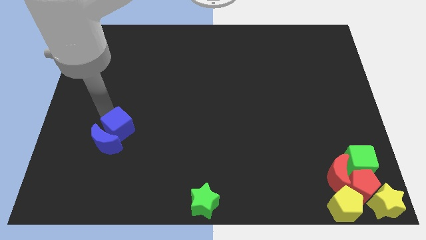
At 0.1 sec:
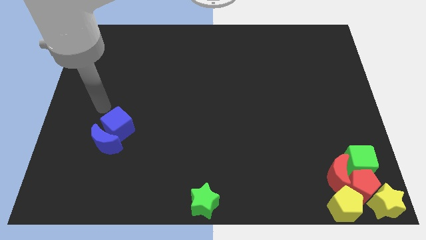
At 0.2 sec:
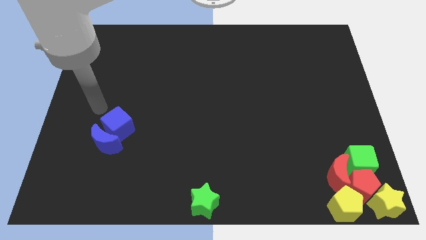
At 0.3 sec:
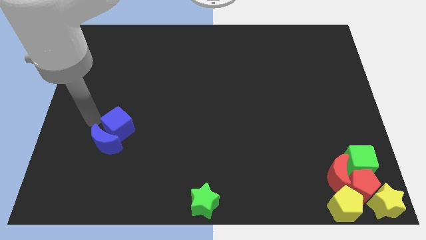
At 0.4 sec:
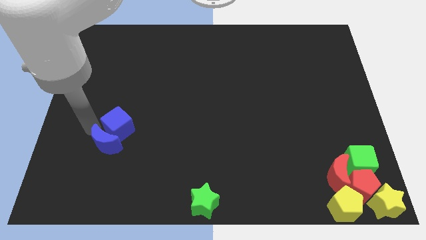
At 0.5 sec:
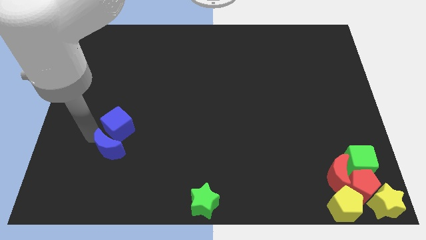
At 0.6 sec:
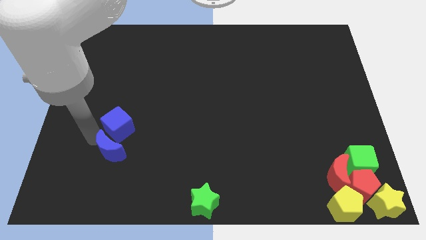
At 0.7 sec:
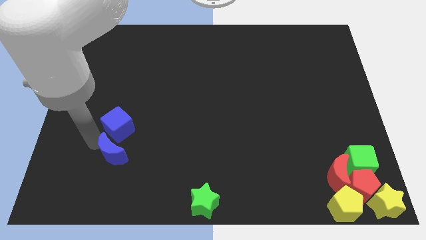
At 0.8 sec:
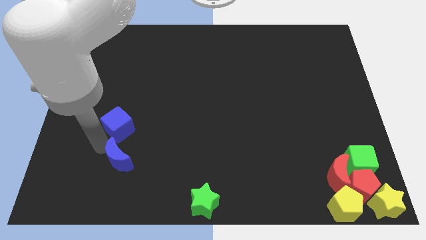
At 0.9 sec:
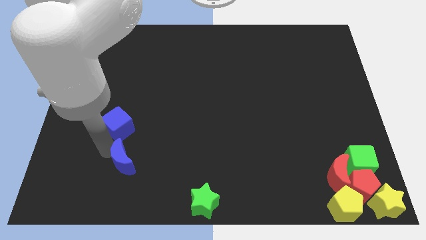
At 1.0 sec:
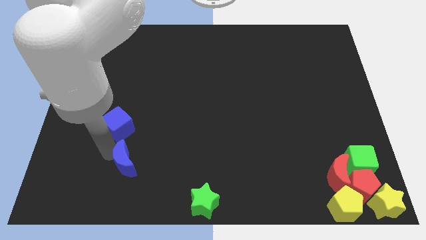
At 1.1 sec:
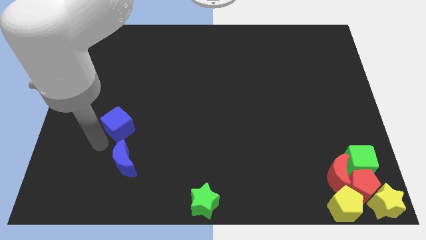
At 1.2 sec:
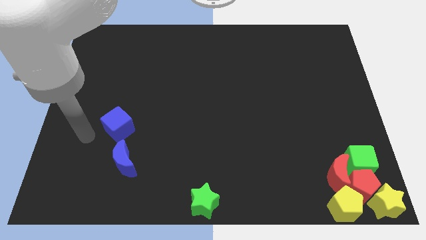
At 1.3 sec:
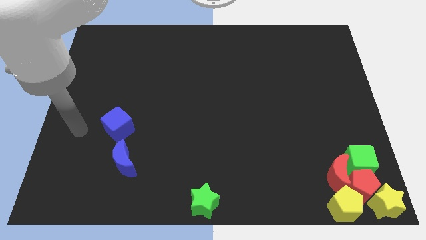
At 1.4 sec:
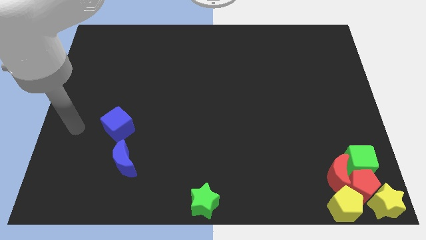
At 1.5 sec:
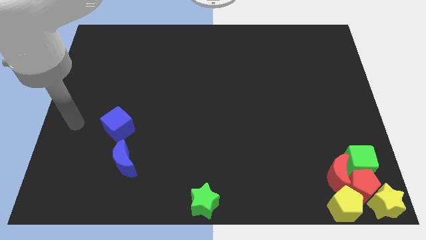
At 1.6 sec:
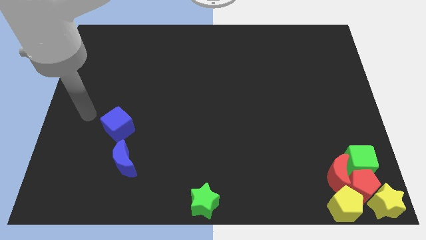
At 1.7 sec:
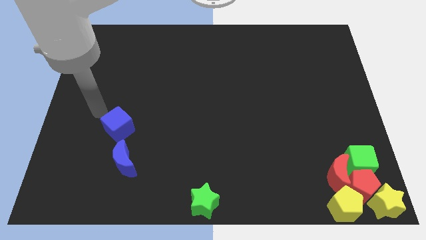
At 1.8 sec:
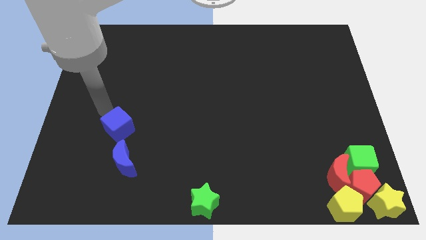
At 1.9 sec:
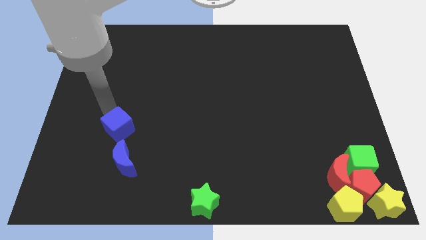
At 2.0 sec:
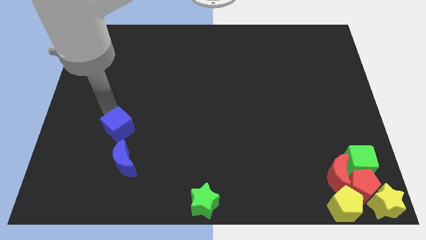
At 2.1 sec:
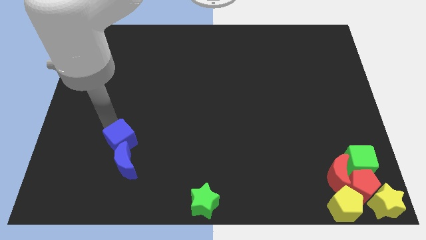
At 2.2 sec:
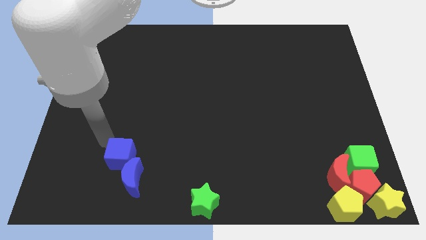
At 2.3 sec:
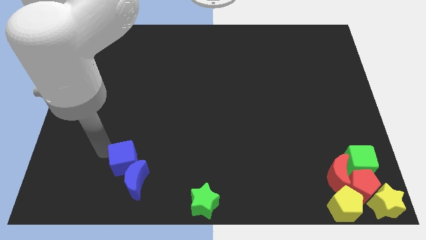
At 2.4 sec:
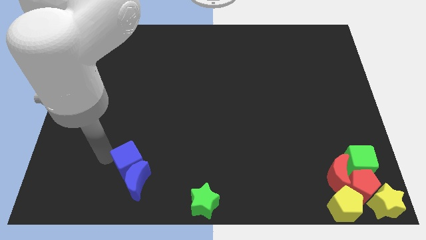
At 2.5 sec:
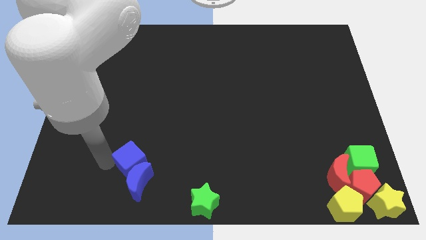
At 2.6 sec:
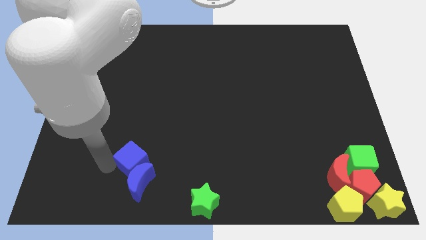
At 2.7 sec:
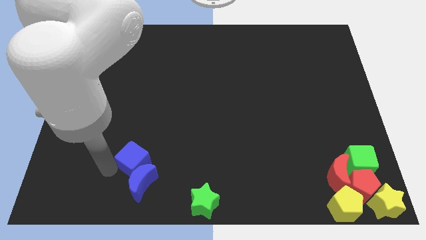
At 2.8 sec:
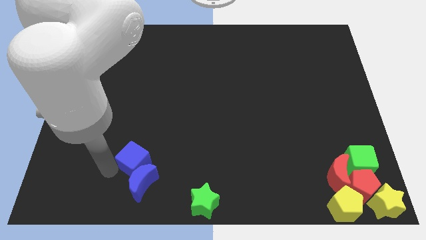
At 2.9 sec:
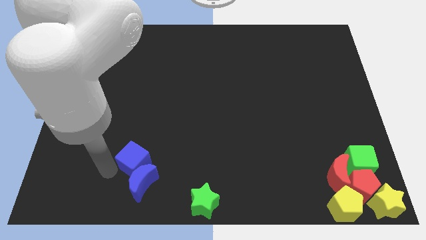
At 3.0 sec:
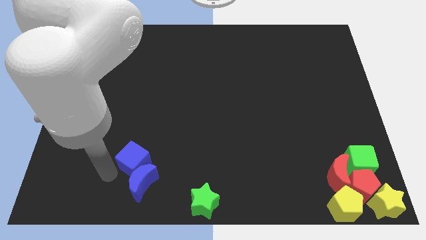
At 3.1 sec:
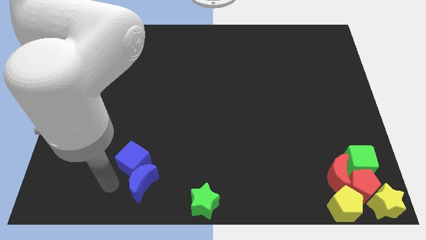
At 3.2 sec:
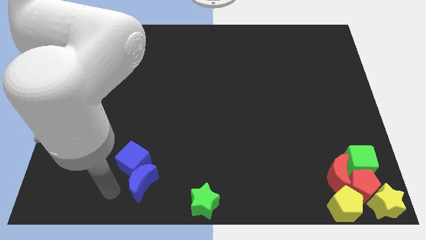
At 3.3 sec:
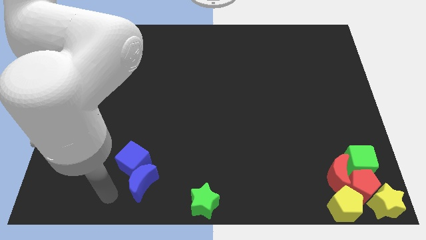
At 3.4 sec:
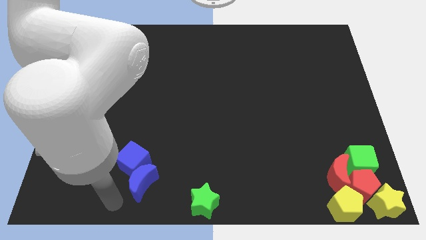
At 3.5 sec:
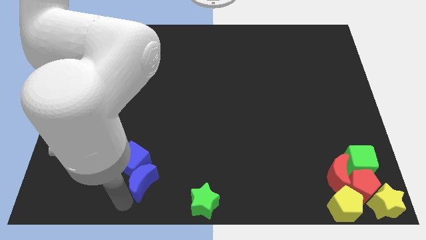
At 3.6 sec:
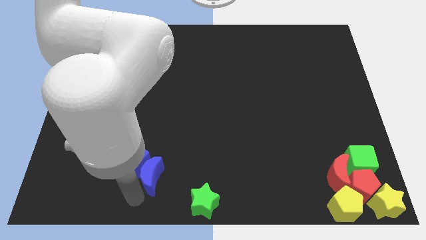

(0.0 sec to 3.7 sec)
slide both the blue blocks towards the green star

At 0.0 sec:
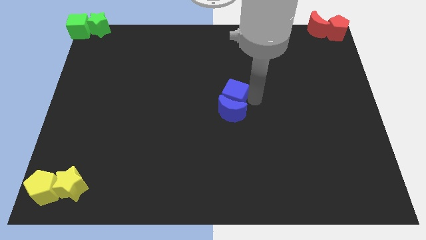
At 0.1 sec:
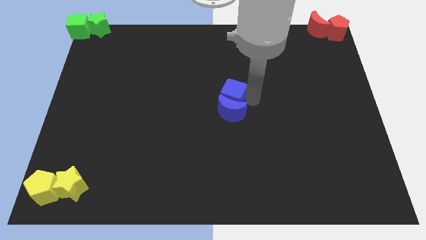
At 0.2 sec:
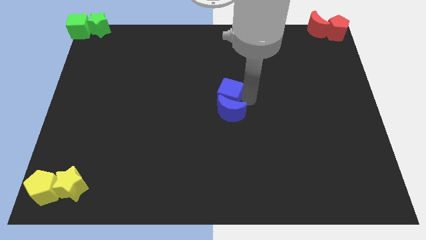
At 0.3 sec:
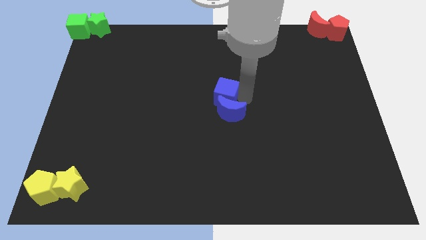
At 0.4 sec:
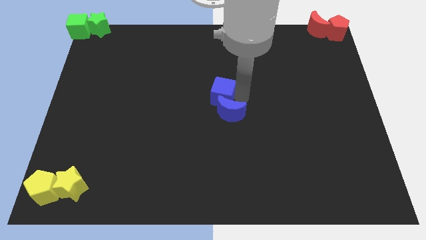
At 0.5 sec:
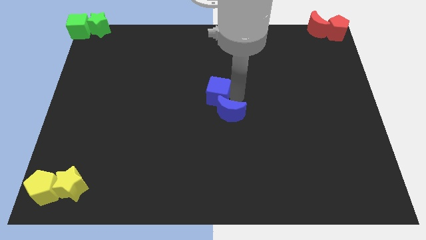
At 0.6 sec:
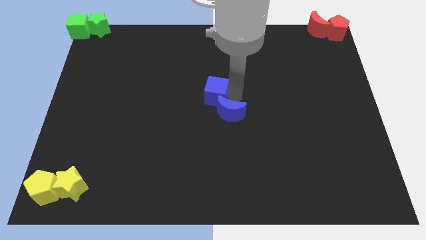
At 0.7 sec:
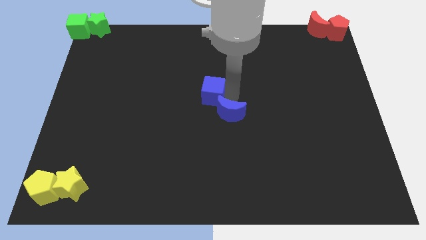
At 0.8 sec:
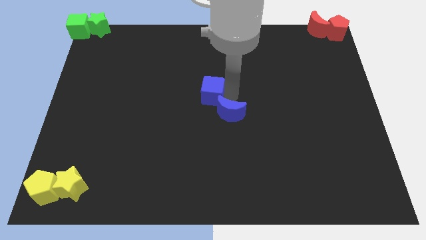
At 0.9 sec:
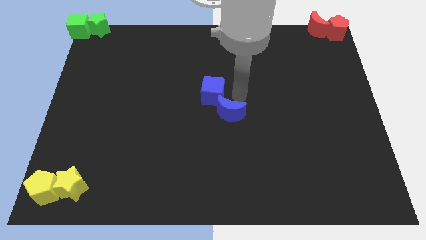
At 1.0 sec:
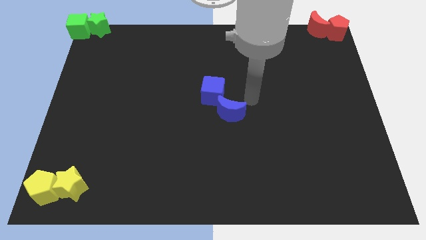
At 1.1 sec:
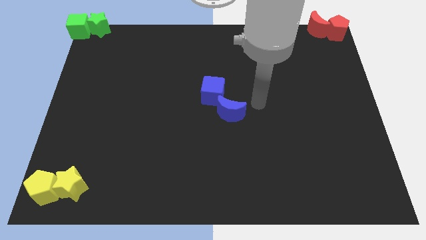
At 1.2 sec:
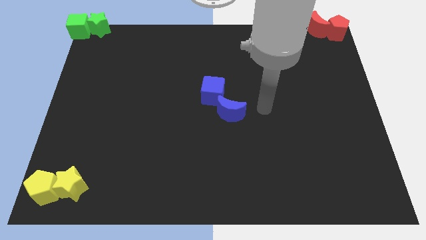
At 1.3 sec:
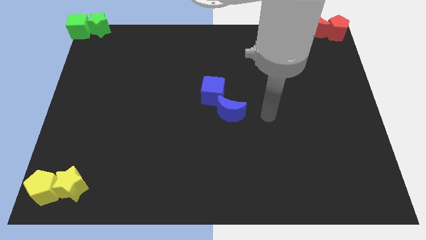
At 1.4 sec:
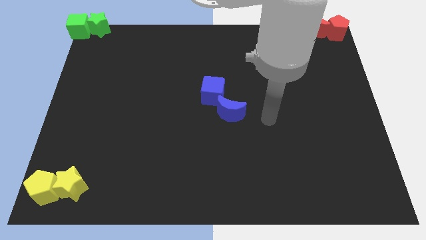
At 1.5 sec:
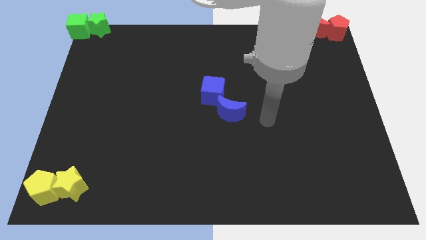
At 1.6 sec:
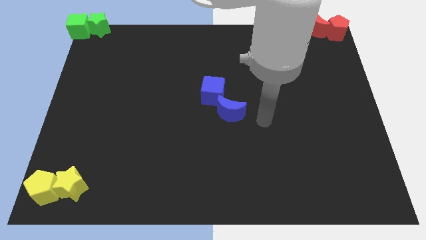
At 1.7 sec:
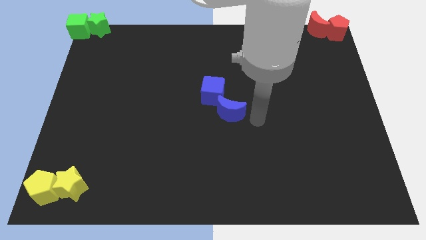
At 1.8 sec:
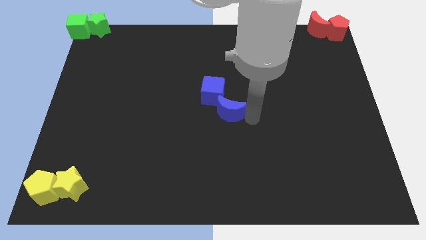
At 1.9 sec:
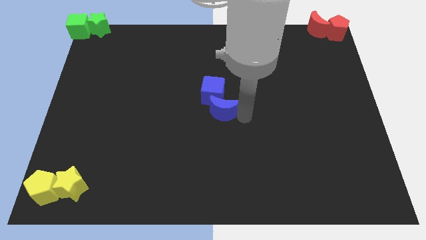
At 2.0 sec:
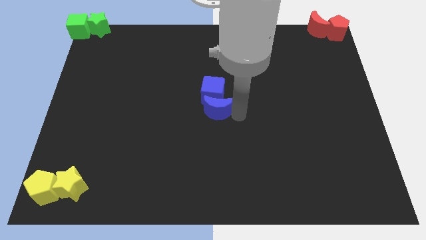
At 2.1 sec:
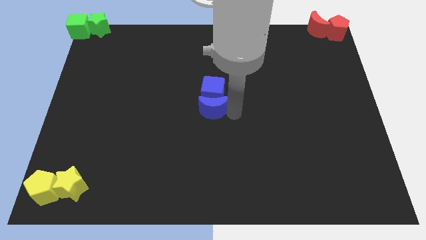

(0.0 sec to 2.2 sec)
push the group of blue blocks to the center of the board

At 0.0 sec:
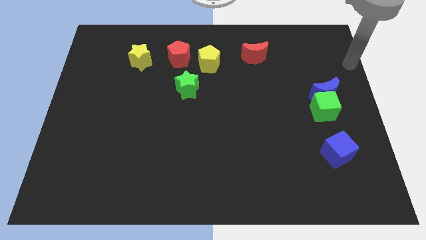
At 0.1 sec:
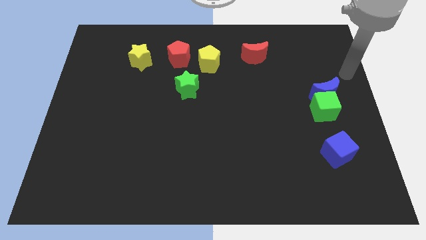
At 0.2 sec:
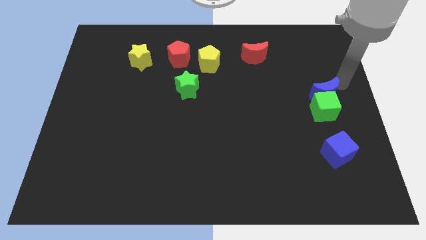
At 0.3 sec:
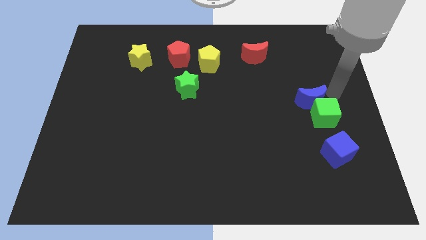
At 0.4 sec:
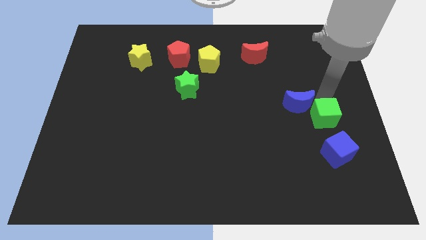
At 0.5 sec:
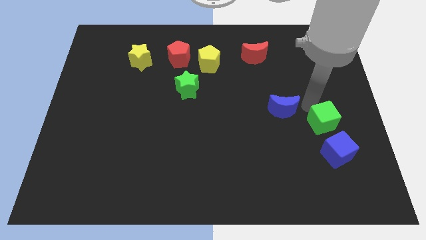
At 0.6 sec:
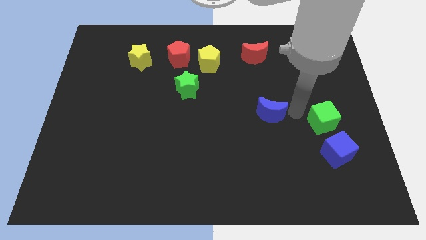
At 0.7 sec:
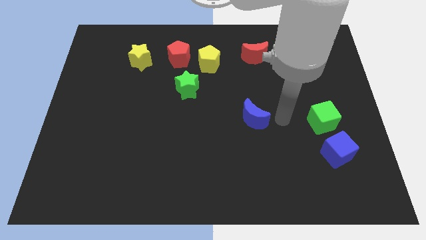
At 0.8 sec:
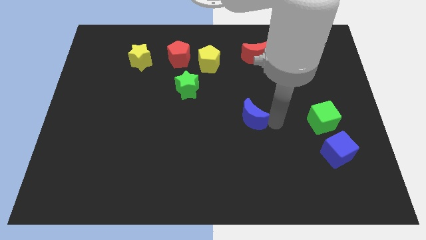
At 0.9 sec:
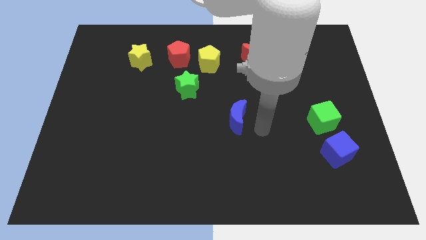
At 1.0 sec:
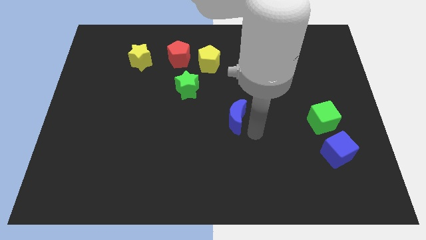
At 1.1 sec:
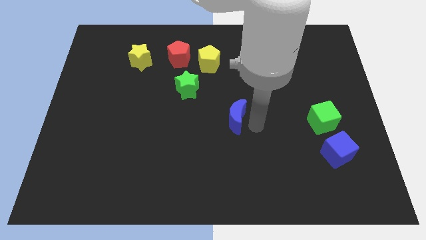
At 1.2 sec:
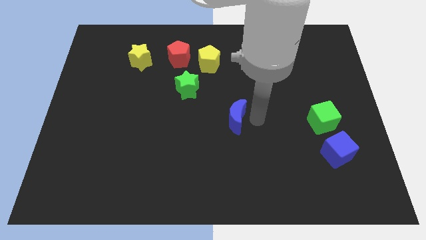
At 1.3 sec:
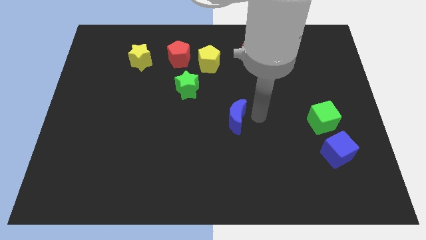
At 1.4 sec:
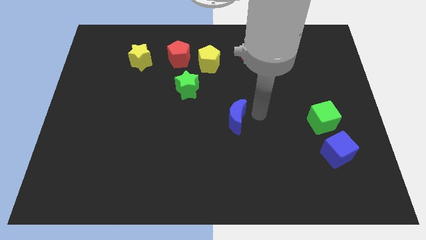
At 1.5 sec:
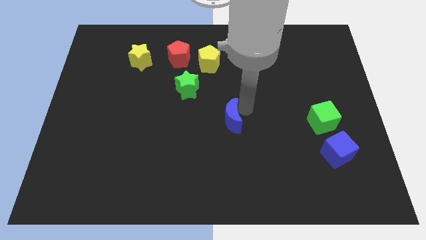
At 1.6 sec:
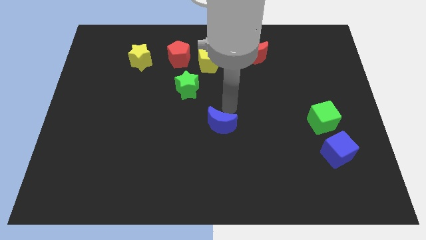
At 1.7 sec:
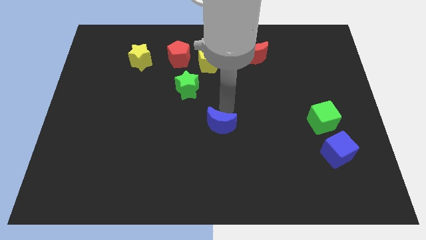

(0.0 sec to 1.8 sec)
separate the blue crescent from the green cube

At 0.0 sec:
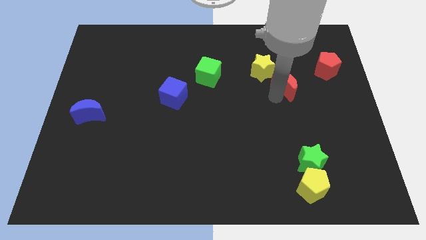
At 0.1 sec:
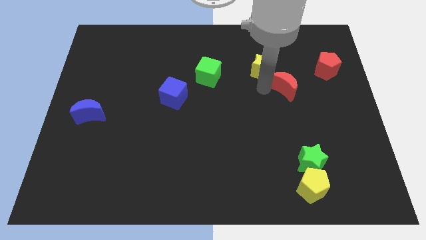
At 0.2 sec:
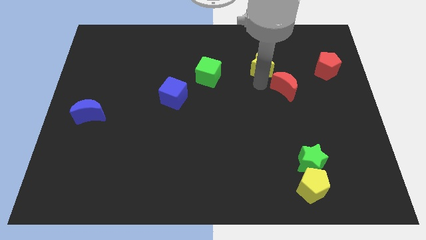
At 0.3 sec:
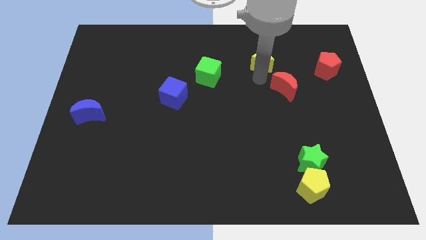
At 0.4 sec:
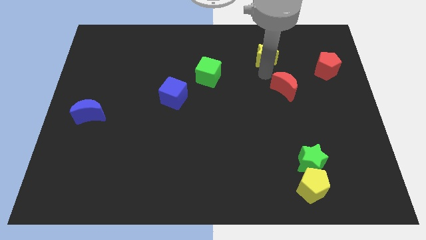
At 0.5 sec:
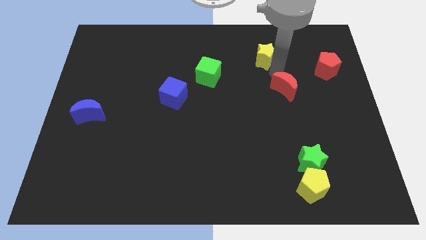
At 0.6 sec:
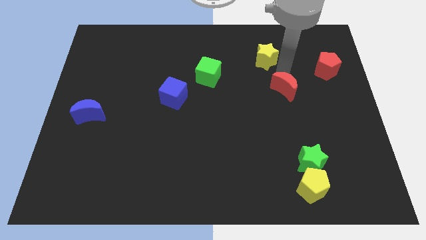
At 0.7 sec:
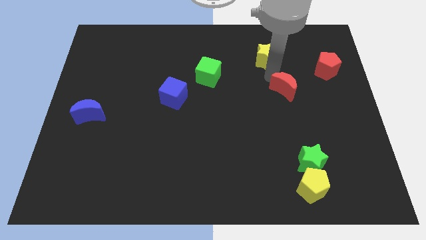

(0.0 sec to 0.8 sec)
push yellow star towards the top of the board

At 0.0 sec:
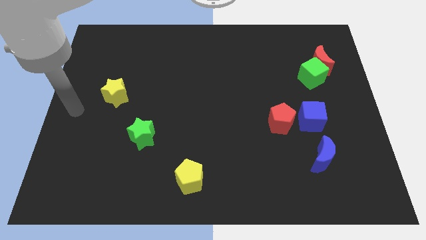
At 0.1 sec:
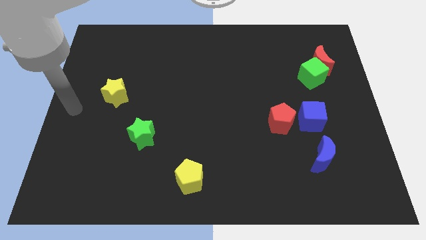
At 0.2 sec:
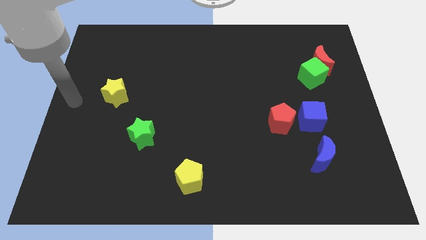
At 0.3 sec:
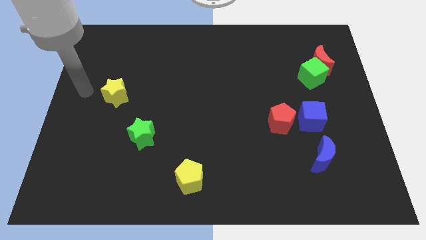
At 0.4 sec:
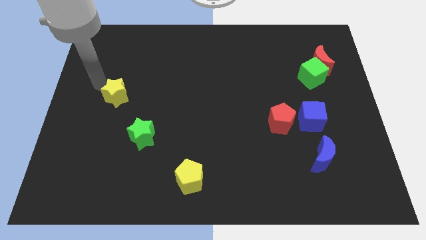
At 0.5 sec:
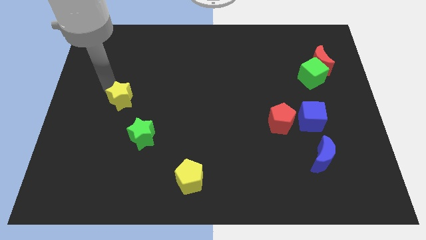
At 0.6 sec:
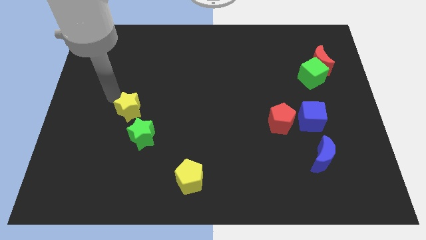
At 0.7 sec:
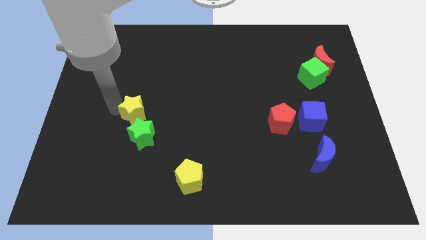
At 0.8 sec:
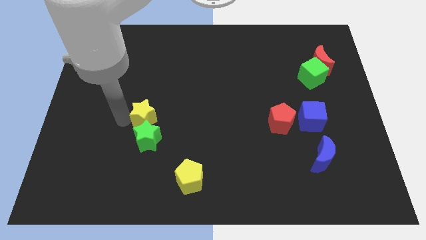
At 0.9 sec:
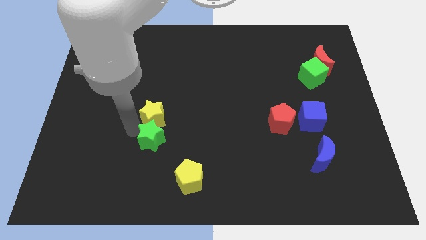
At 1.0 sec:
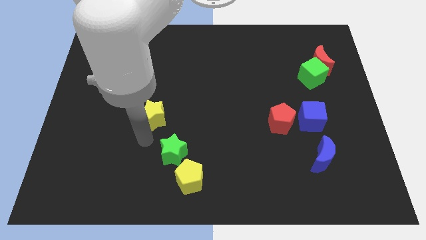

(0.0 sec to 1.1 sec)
place yellow star on top of the green star
